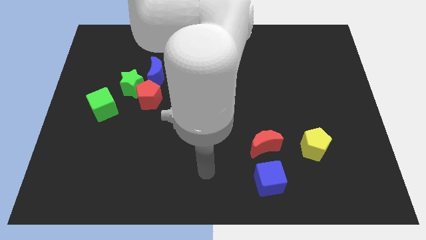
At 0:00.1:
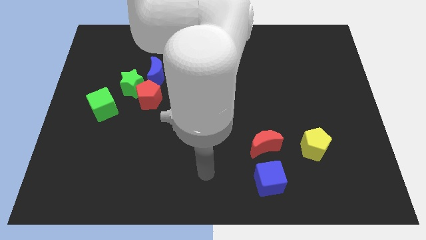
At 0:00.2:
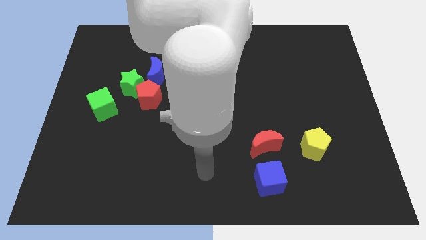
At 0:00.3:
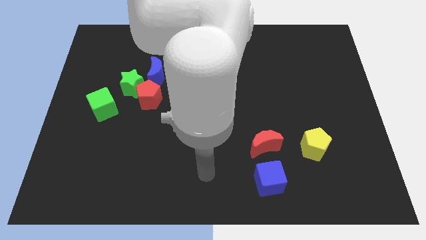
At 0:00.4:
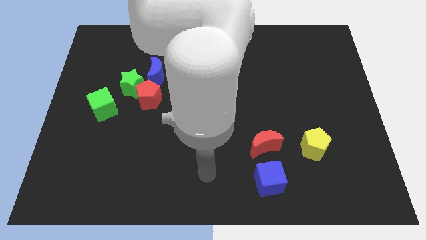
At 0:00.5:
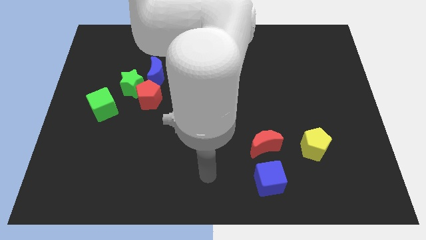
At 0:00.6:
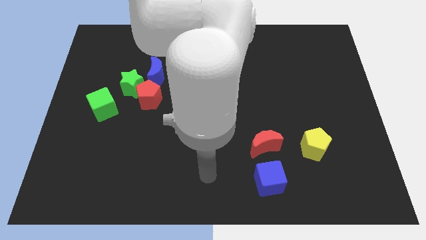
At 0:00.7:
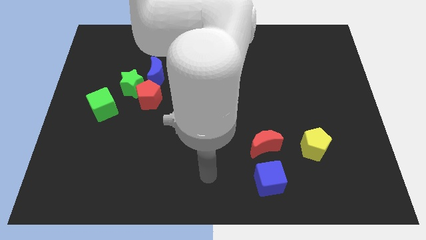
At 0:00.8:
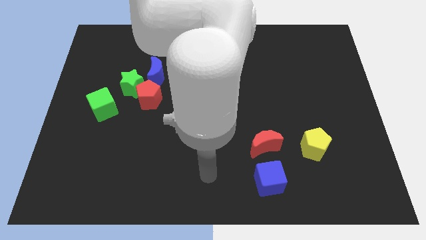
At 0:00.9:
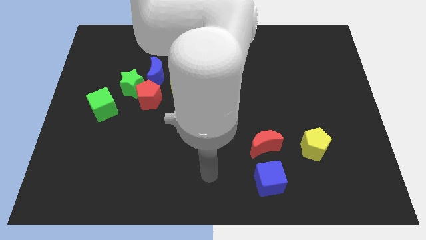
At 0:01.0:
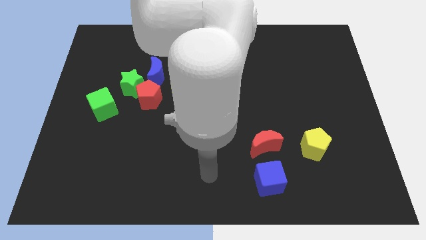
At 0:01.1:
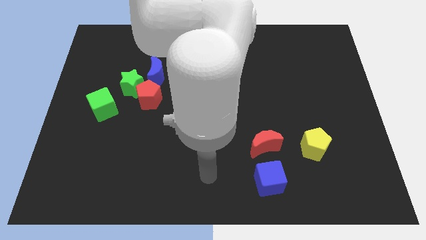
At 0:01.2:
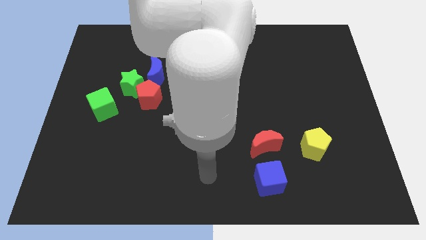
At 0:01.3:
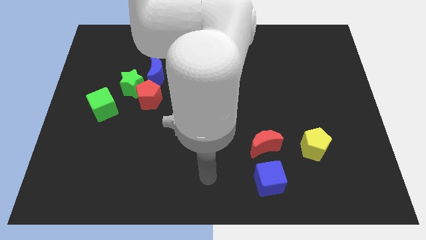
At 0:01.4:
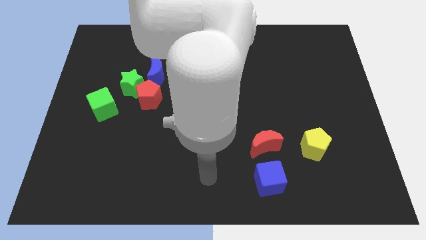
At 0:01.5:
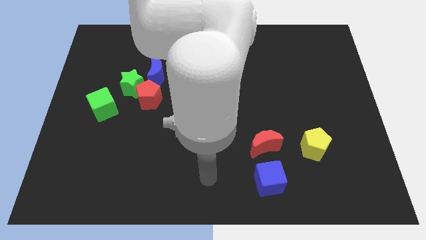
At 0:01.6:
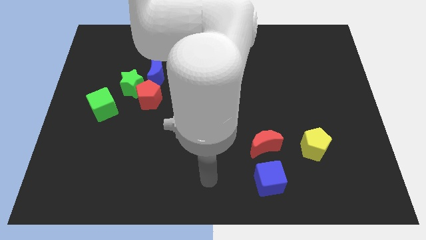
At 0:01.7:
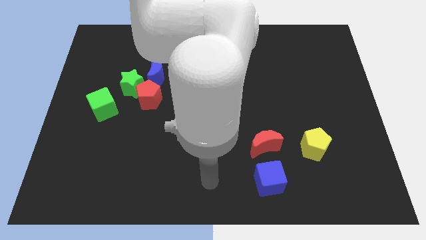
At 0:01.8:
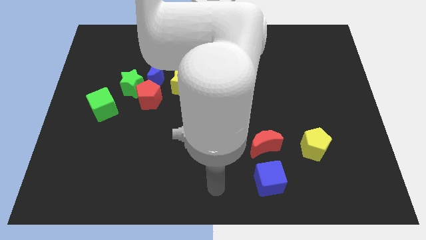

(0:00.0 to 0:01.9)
move your arm to the left side of the blue cube

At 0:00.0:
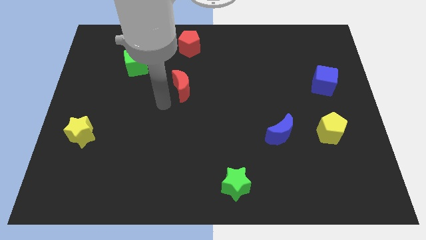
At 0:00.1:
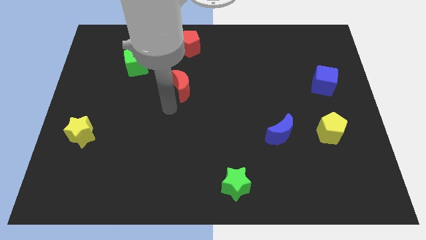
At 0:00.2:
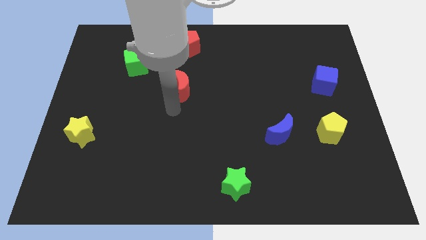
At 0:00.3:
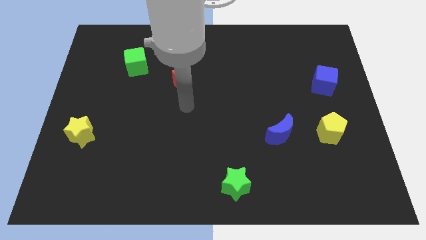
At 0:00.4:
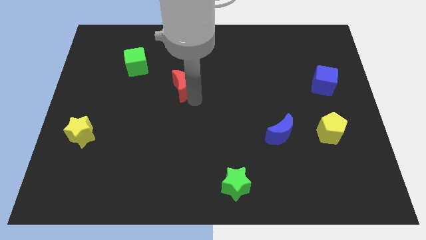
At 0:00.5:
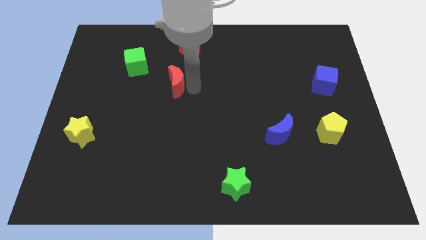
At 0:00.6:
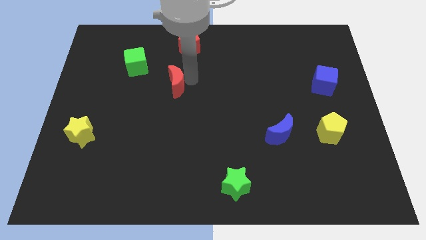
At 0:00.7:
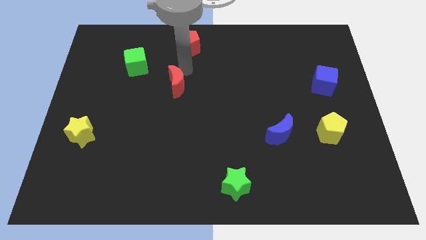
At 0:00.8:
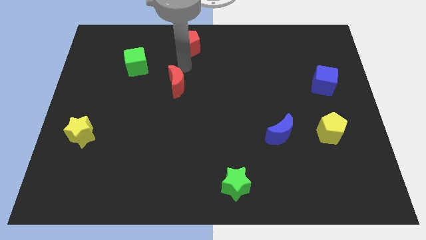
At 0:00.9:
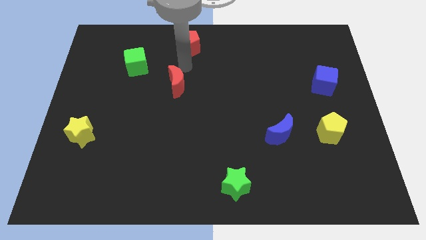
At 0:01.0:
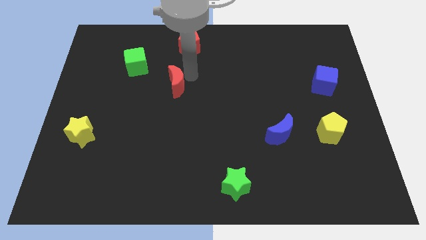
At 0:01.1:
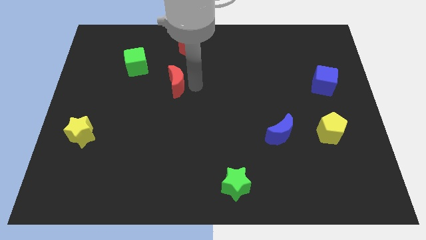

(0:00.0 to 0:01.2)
slide the red moon slightly

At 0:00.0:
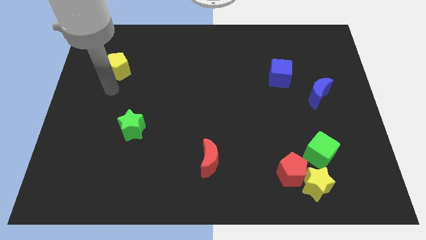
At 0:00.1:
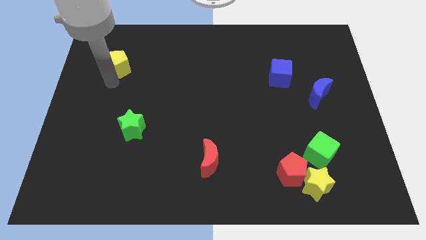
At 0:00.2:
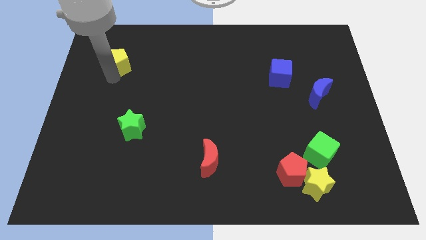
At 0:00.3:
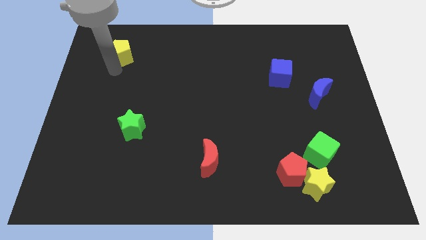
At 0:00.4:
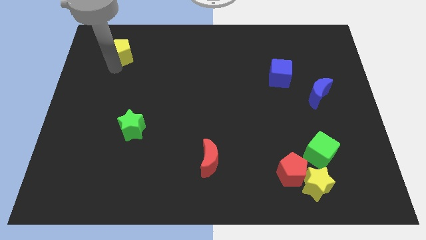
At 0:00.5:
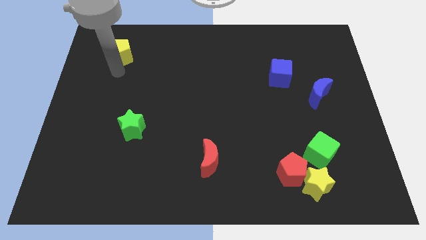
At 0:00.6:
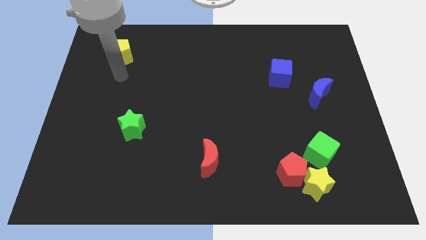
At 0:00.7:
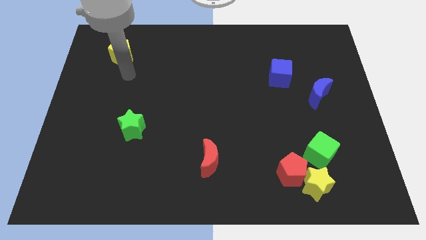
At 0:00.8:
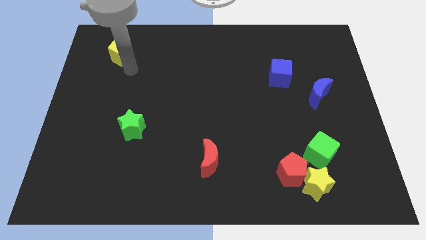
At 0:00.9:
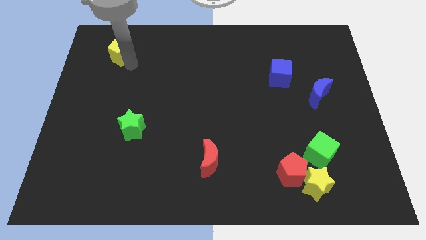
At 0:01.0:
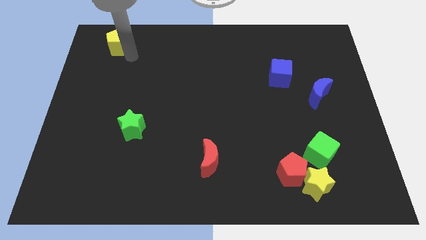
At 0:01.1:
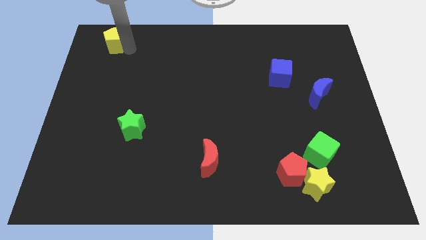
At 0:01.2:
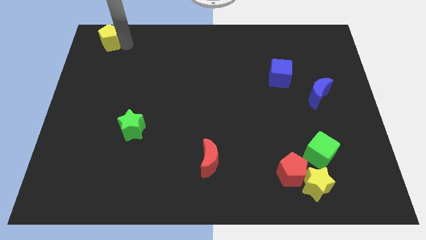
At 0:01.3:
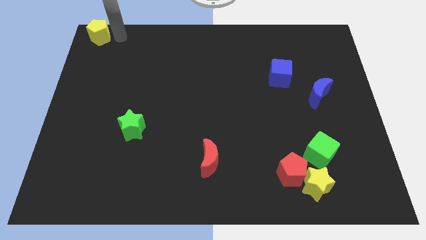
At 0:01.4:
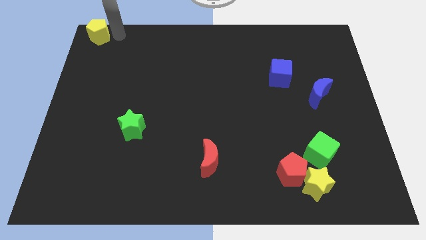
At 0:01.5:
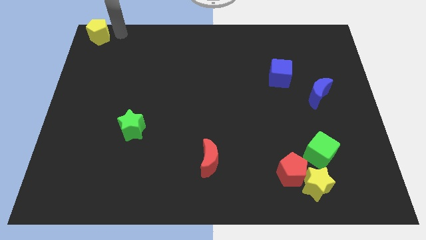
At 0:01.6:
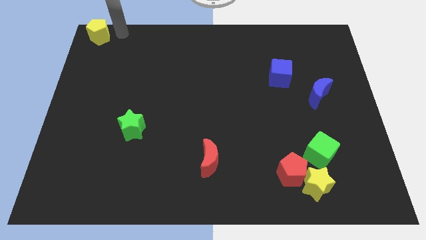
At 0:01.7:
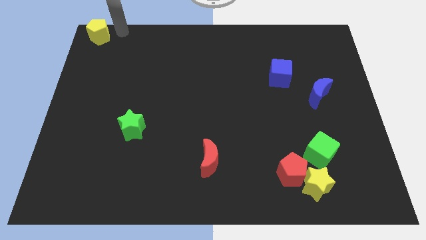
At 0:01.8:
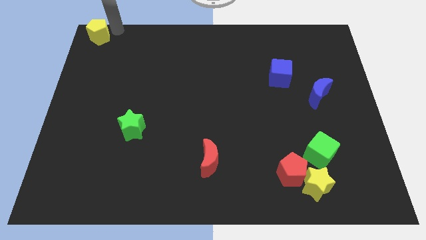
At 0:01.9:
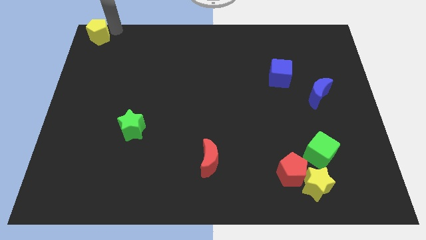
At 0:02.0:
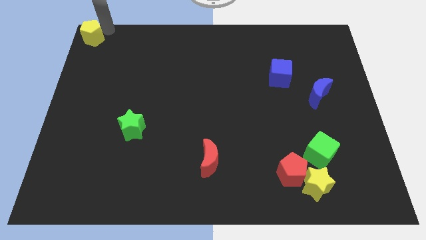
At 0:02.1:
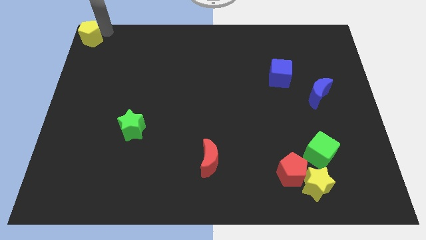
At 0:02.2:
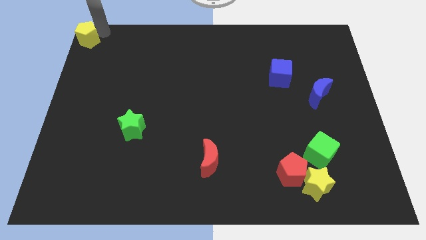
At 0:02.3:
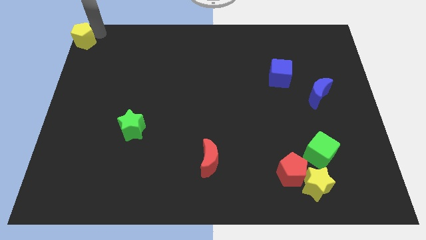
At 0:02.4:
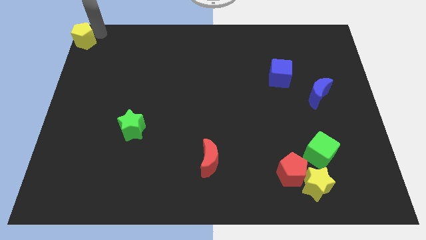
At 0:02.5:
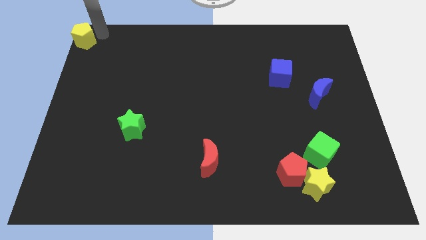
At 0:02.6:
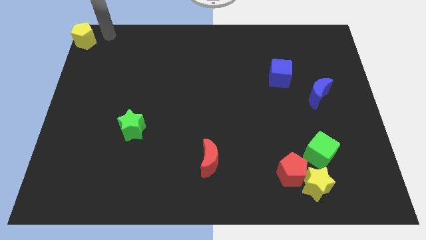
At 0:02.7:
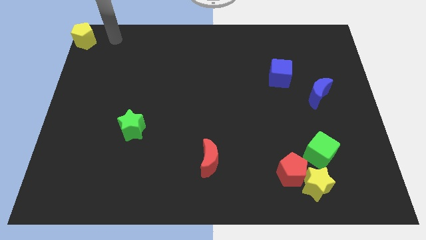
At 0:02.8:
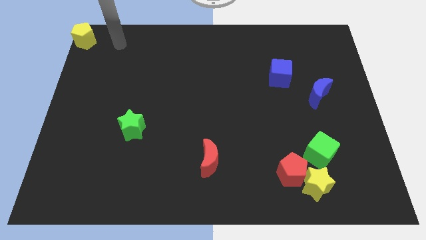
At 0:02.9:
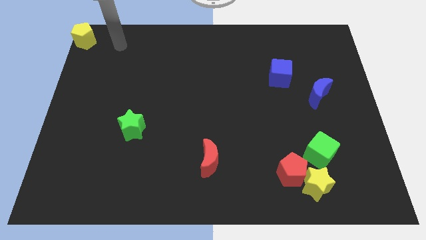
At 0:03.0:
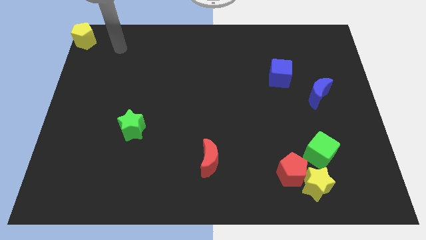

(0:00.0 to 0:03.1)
put the yellow pentagon at the top left corner of the board

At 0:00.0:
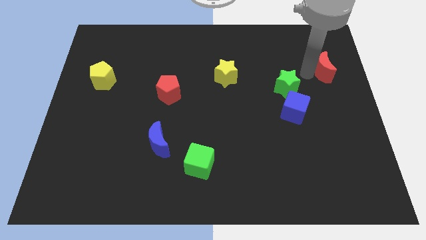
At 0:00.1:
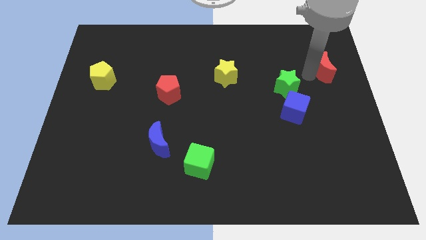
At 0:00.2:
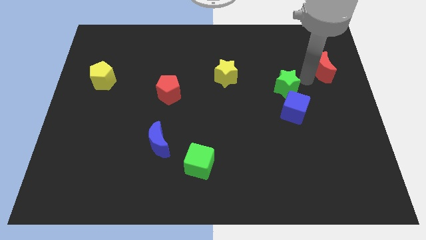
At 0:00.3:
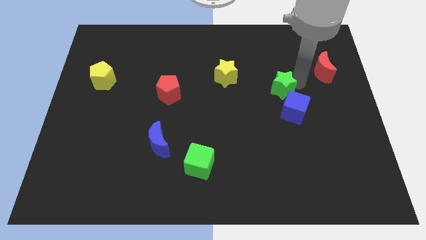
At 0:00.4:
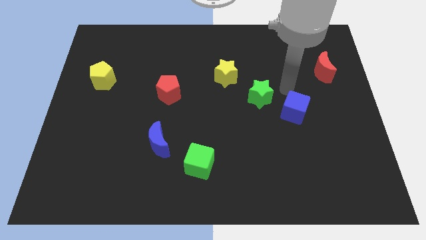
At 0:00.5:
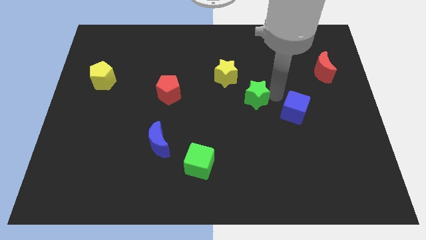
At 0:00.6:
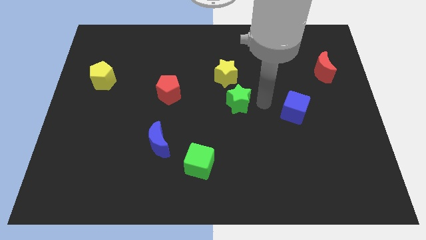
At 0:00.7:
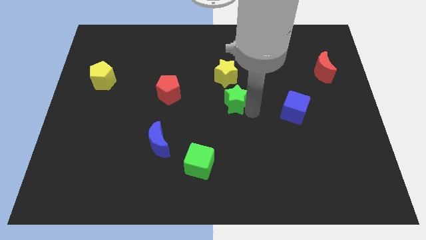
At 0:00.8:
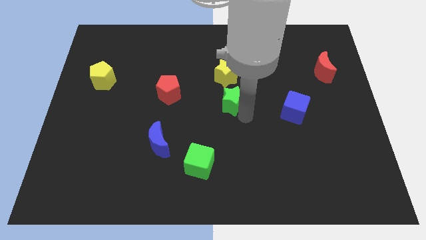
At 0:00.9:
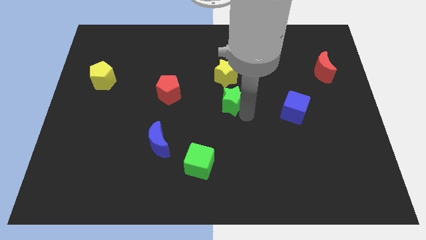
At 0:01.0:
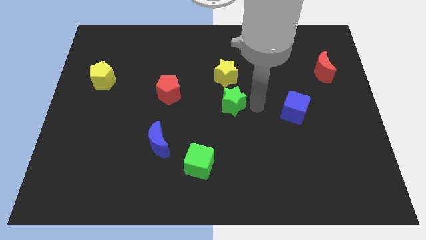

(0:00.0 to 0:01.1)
move green star below yellow star

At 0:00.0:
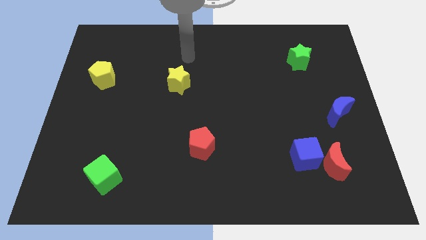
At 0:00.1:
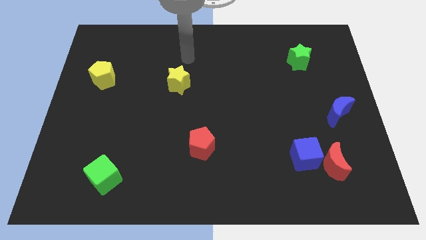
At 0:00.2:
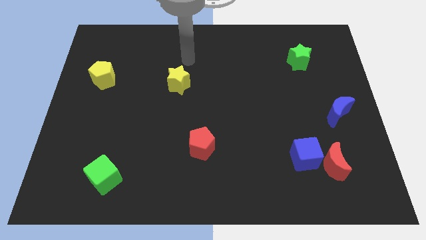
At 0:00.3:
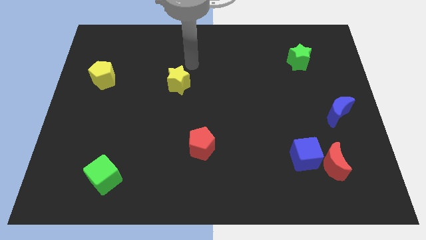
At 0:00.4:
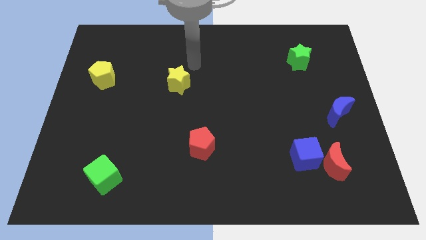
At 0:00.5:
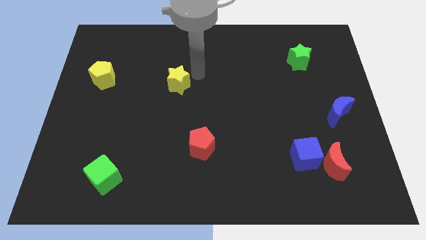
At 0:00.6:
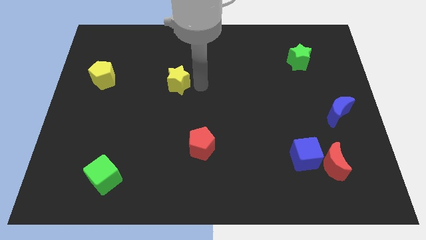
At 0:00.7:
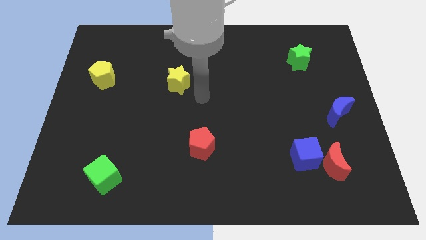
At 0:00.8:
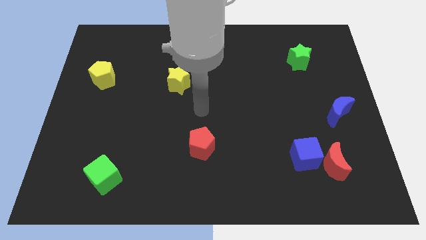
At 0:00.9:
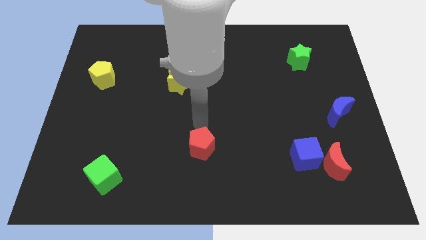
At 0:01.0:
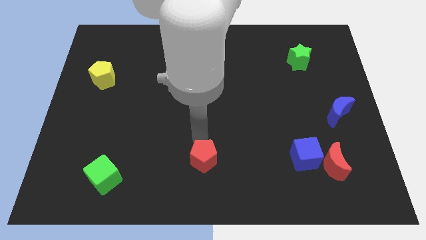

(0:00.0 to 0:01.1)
move the red pentagon slightly to the bottom

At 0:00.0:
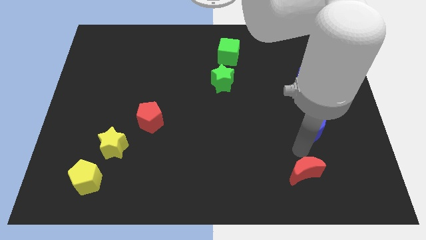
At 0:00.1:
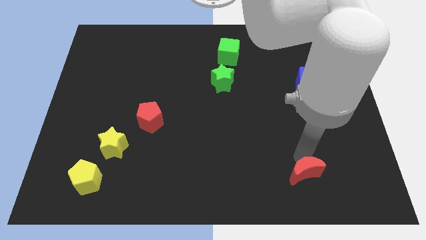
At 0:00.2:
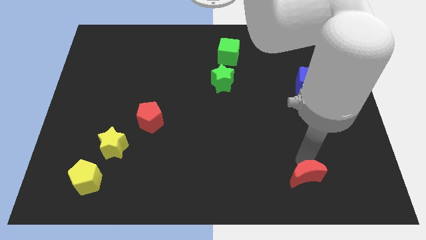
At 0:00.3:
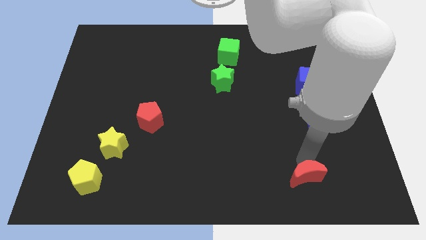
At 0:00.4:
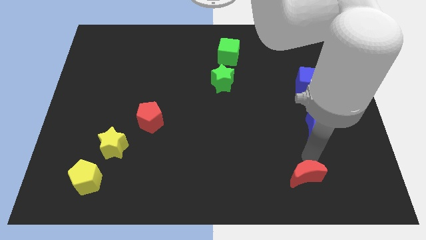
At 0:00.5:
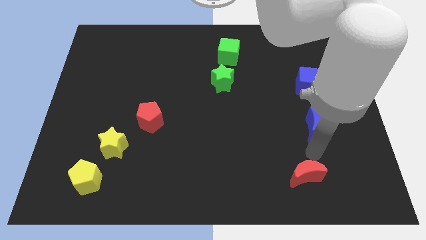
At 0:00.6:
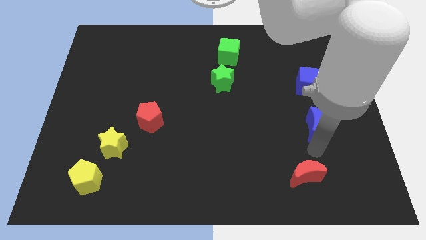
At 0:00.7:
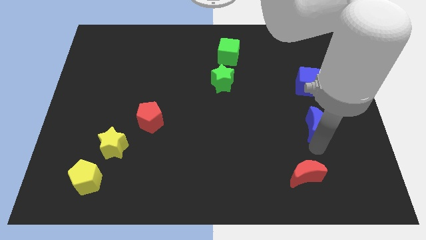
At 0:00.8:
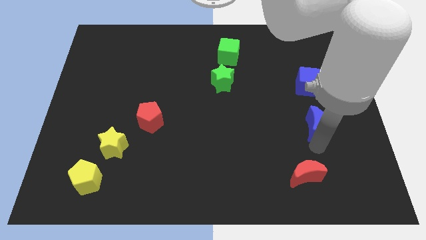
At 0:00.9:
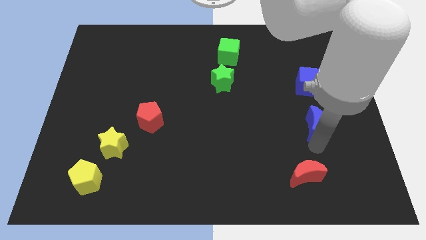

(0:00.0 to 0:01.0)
move the red crescent slightly to the down
